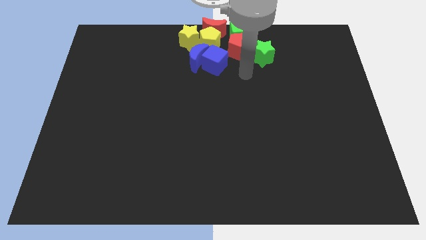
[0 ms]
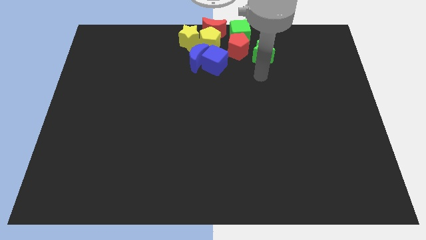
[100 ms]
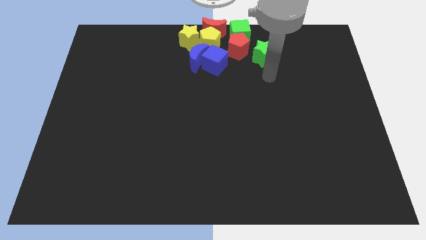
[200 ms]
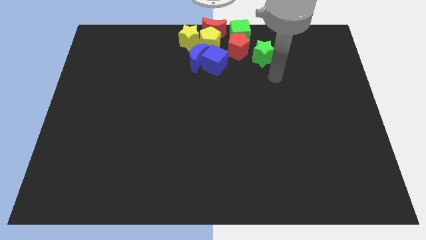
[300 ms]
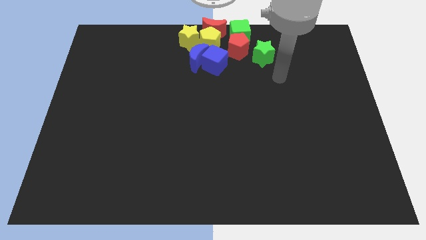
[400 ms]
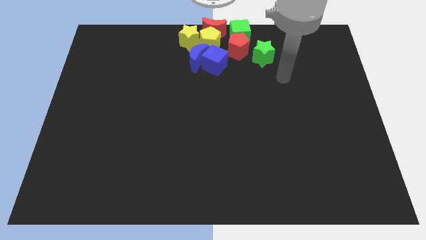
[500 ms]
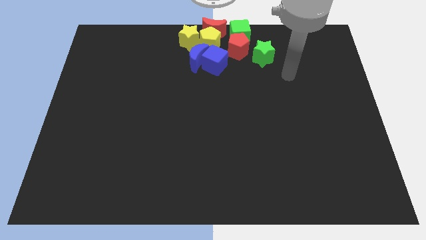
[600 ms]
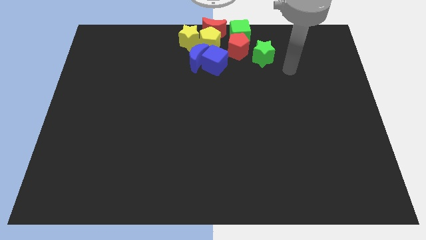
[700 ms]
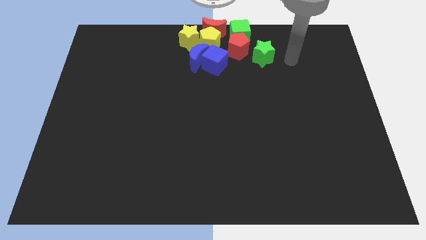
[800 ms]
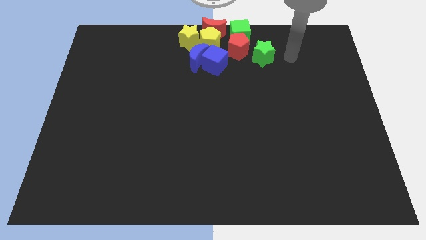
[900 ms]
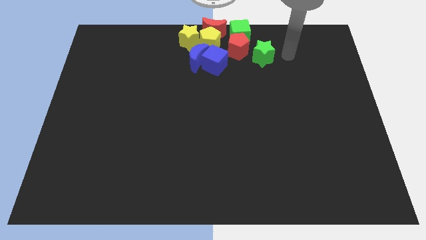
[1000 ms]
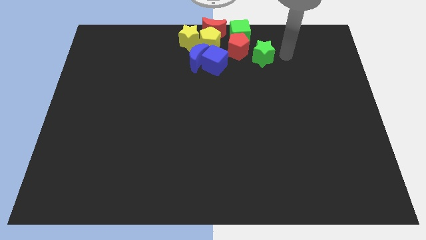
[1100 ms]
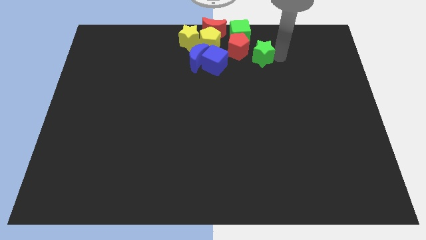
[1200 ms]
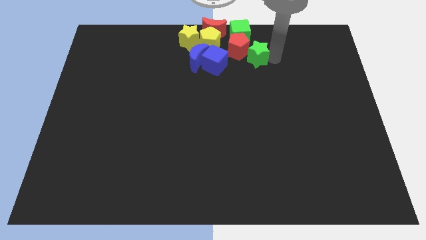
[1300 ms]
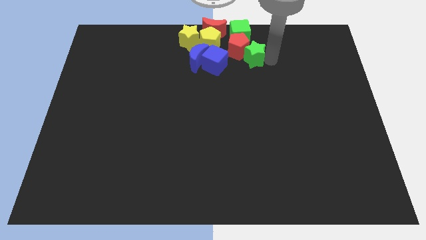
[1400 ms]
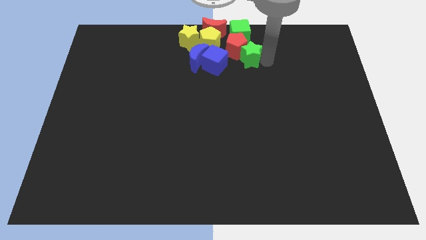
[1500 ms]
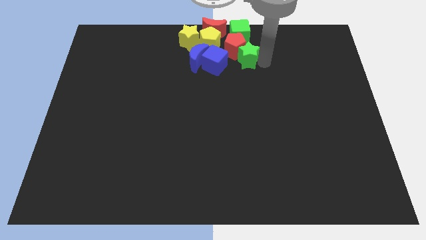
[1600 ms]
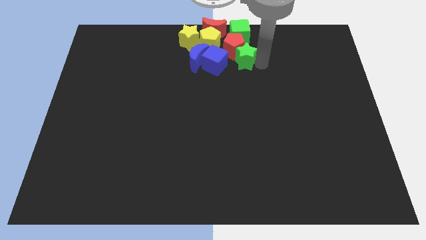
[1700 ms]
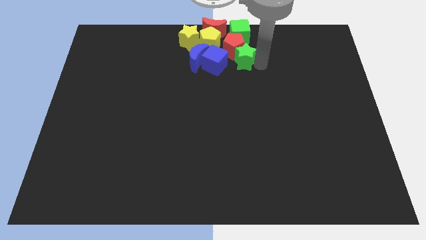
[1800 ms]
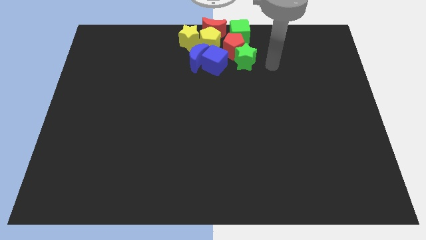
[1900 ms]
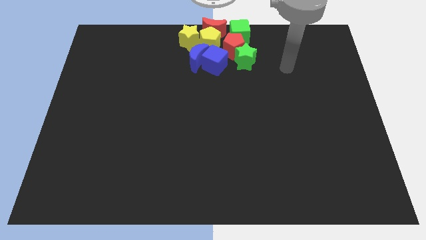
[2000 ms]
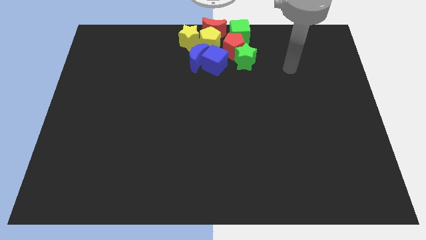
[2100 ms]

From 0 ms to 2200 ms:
move the green star into the red pentagon

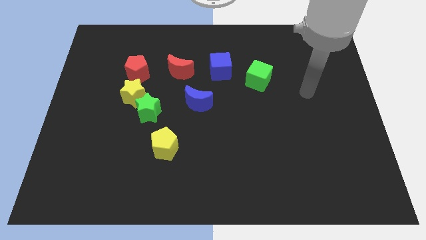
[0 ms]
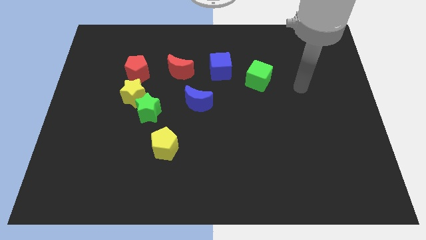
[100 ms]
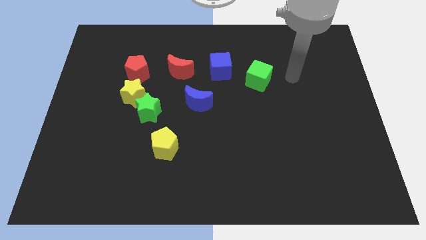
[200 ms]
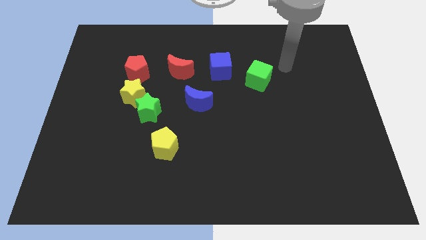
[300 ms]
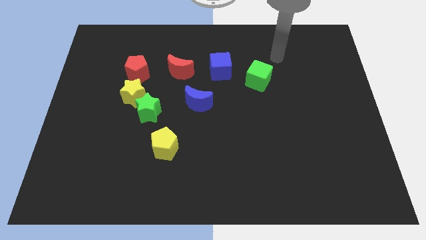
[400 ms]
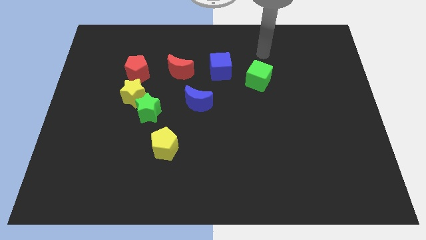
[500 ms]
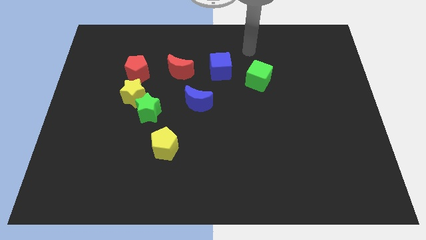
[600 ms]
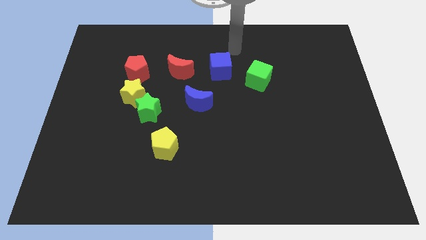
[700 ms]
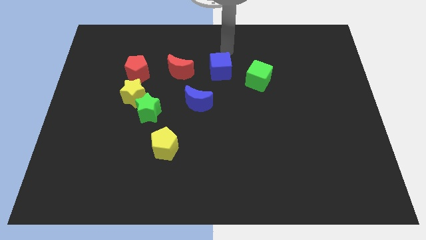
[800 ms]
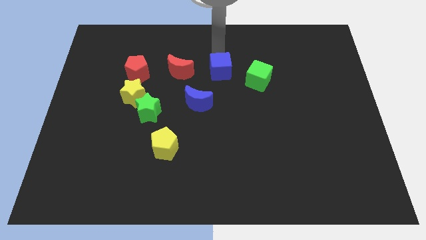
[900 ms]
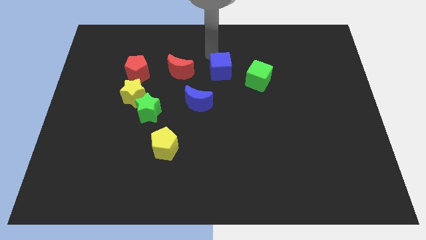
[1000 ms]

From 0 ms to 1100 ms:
place the arm above the blue cube

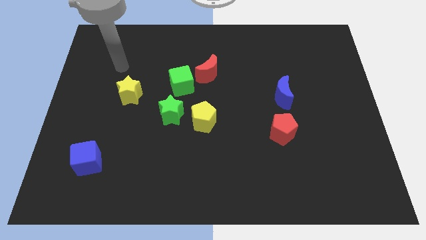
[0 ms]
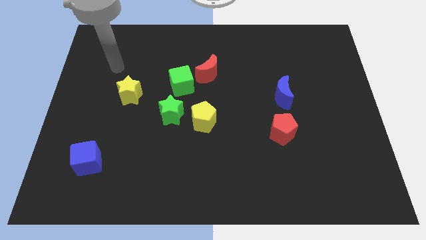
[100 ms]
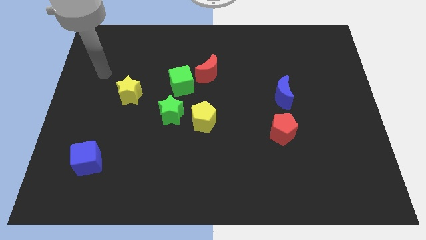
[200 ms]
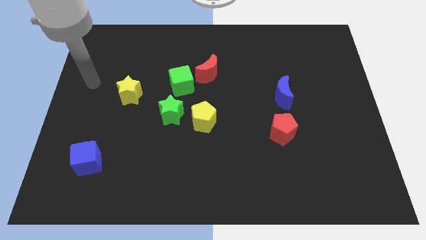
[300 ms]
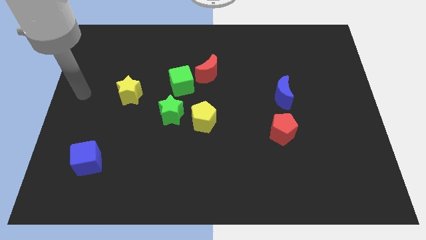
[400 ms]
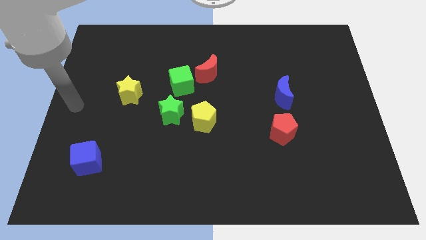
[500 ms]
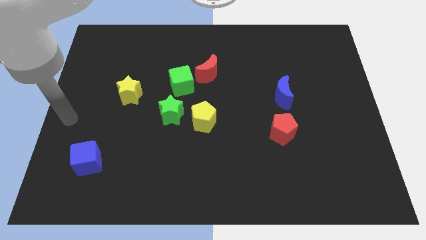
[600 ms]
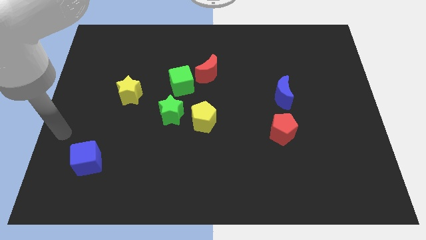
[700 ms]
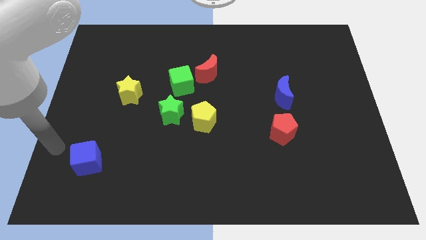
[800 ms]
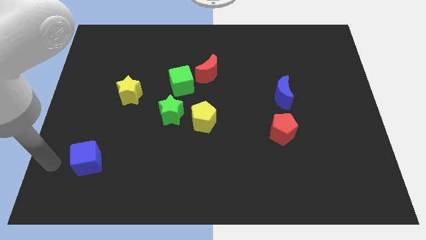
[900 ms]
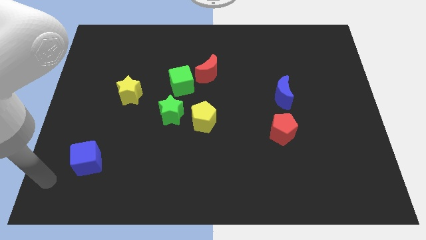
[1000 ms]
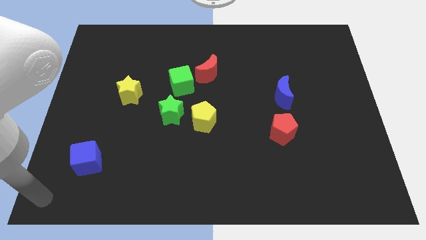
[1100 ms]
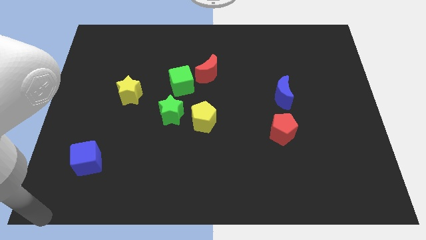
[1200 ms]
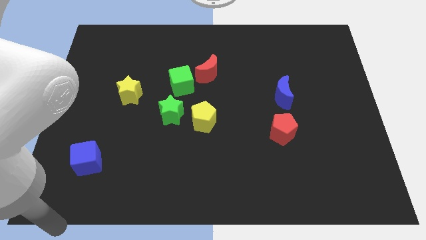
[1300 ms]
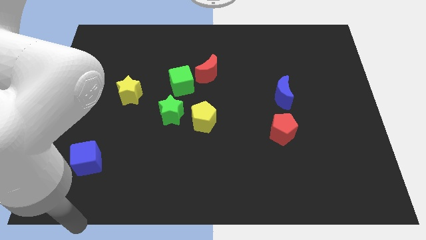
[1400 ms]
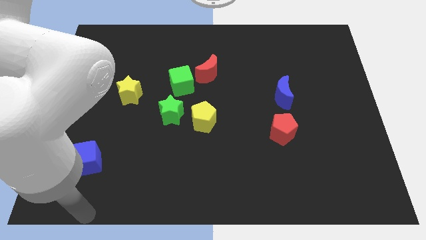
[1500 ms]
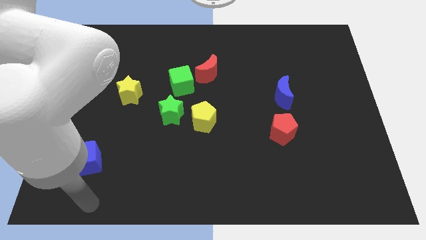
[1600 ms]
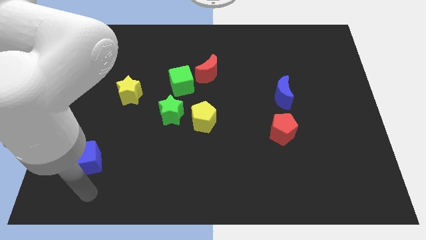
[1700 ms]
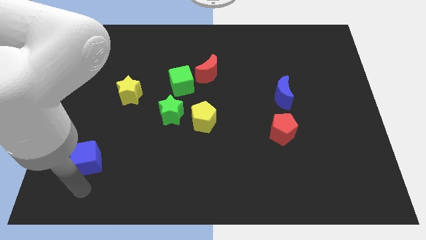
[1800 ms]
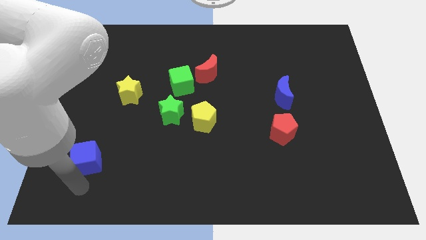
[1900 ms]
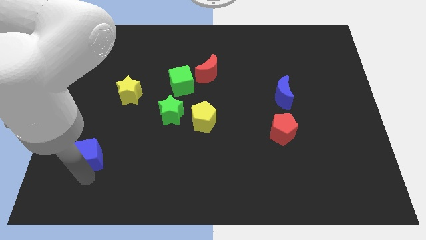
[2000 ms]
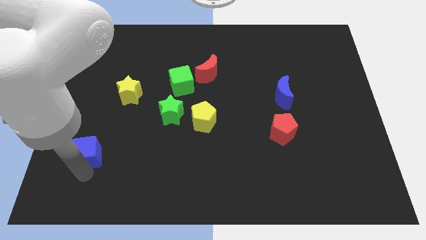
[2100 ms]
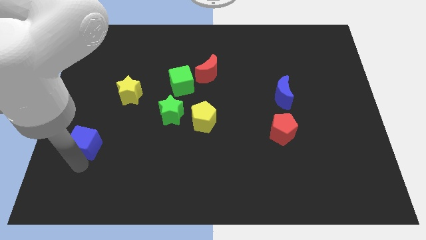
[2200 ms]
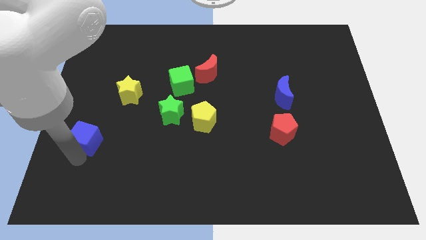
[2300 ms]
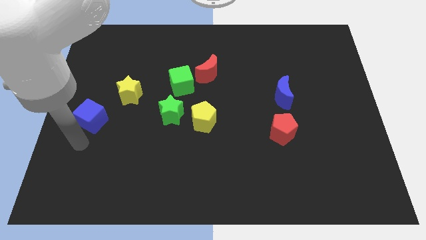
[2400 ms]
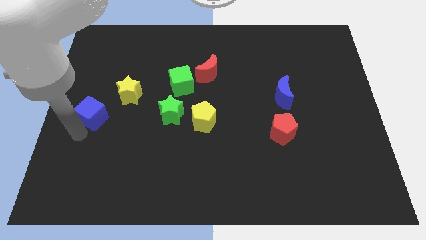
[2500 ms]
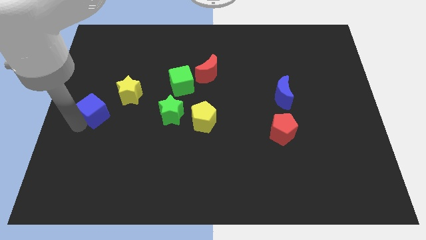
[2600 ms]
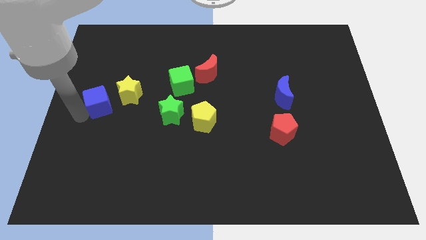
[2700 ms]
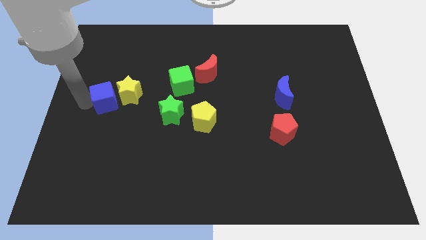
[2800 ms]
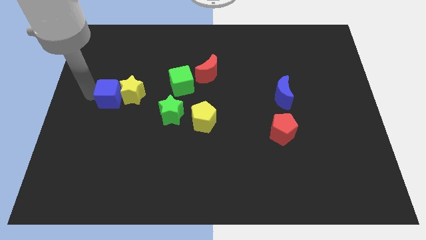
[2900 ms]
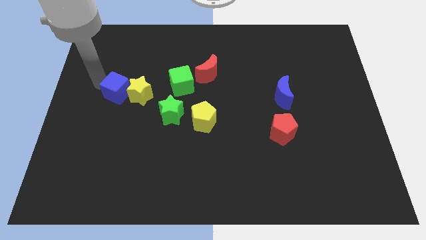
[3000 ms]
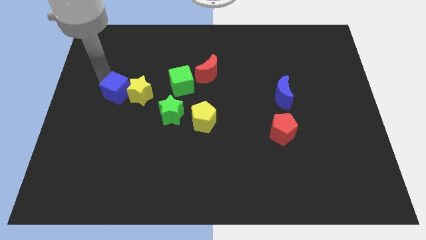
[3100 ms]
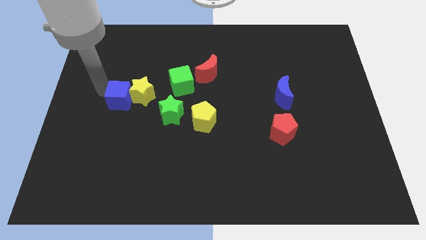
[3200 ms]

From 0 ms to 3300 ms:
place the blue cube on the left side of the yellow star

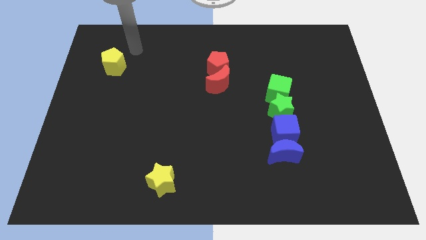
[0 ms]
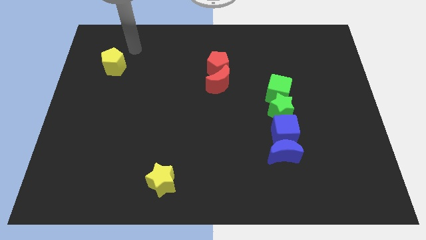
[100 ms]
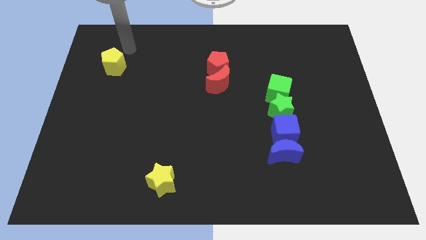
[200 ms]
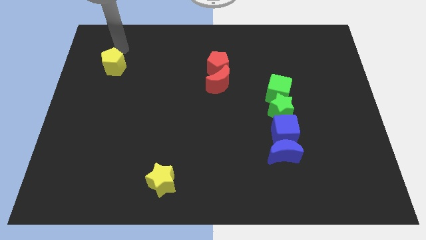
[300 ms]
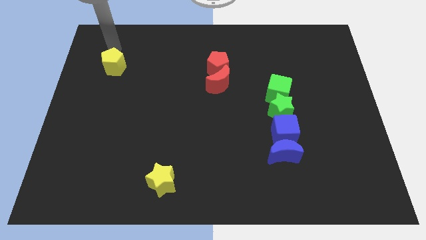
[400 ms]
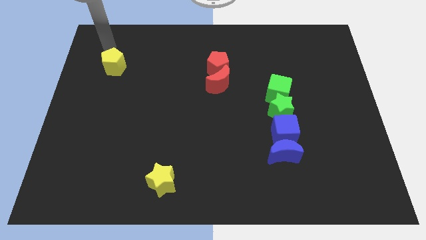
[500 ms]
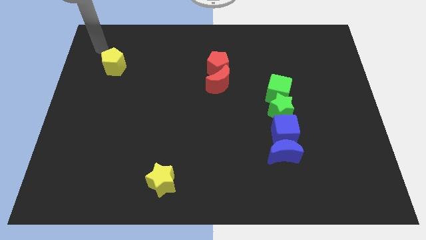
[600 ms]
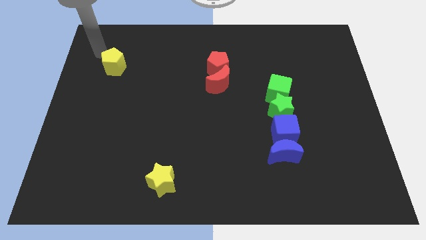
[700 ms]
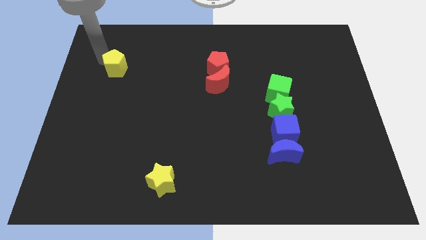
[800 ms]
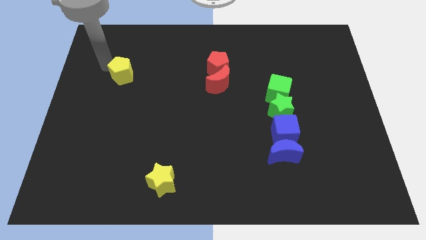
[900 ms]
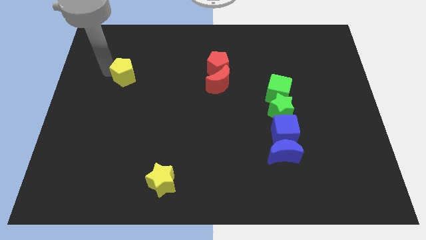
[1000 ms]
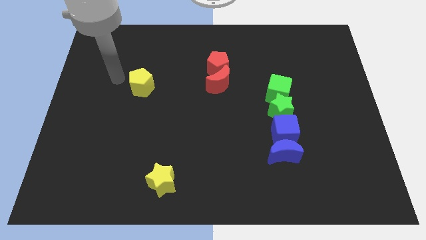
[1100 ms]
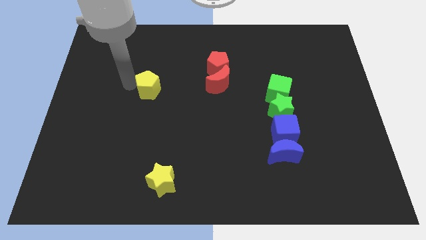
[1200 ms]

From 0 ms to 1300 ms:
place the yellow pentagon parallel to red moon

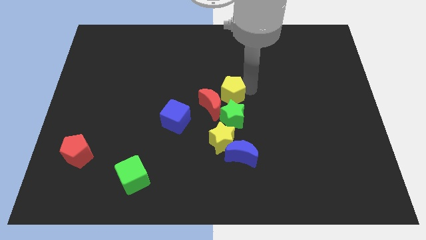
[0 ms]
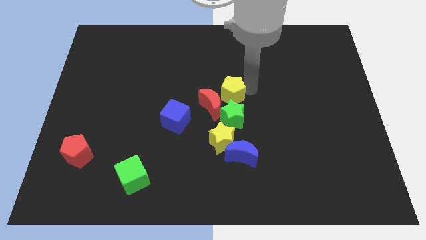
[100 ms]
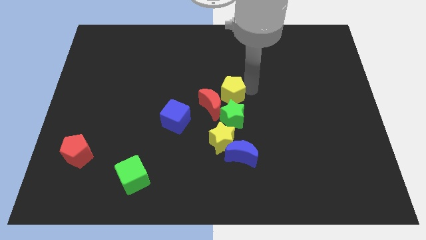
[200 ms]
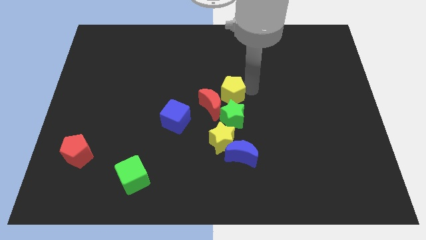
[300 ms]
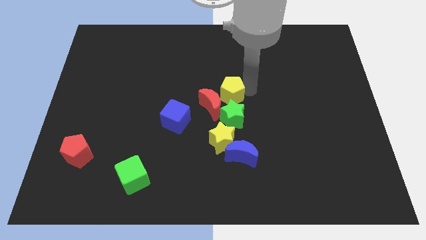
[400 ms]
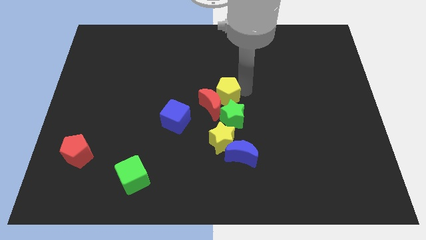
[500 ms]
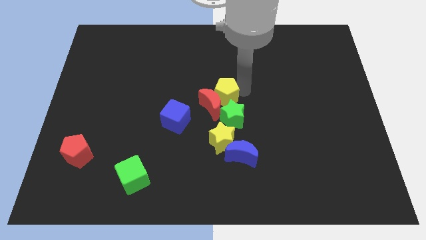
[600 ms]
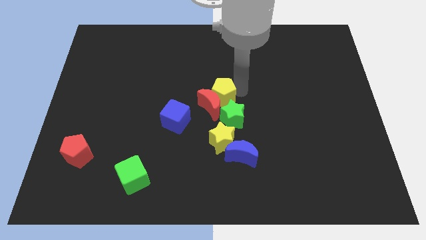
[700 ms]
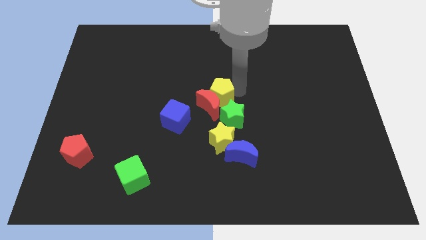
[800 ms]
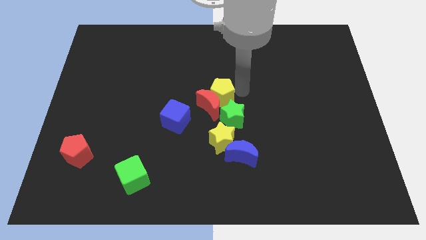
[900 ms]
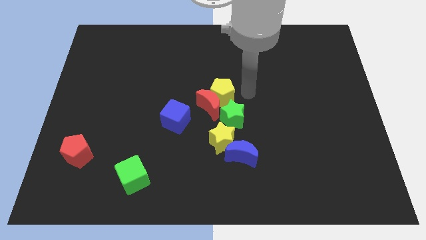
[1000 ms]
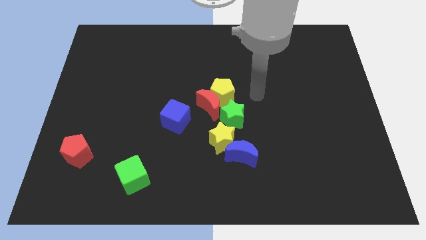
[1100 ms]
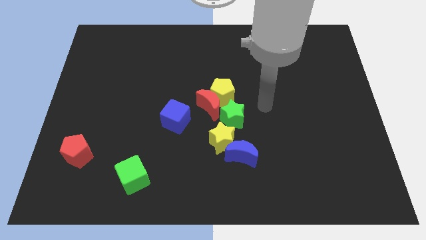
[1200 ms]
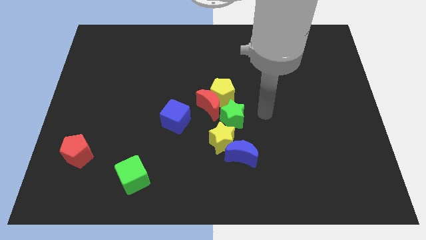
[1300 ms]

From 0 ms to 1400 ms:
push the yellow pentagon towards the red crescent
